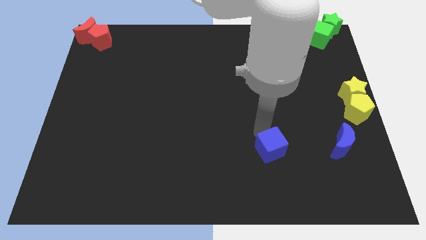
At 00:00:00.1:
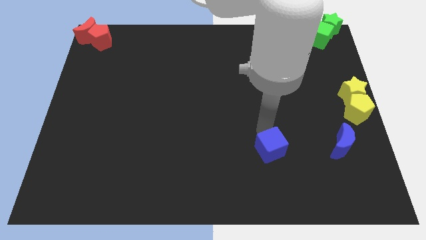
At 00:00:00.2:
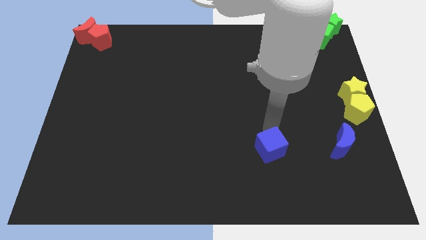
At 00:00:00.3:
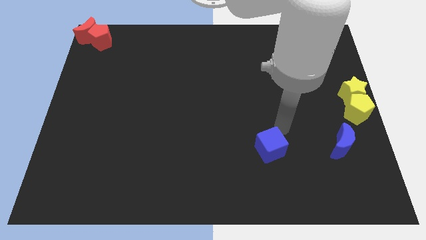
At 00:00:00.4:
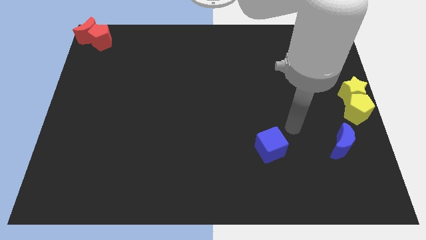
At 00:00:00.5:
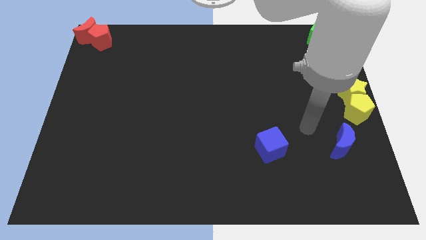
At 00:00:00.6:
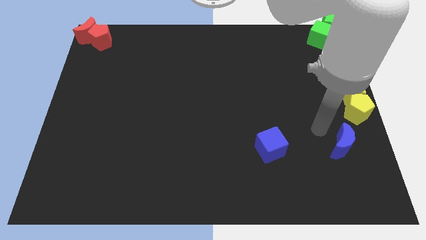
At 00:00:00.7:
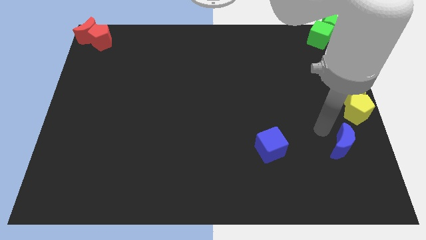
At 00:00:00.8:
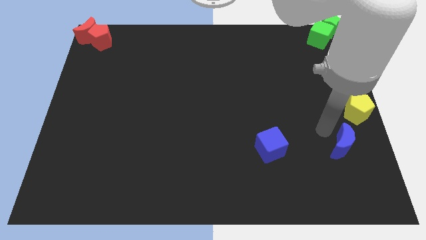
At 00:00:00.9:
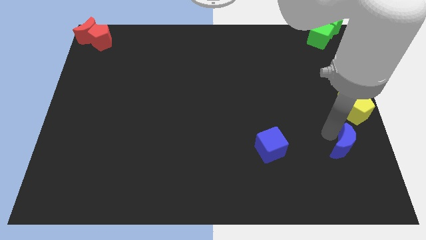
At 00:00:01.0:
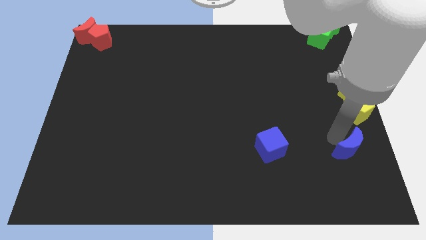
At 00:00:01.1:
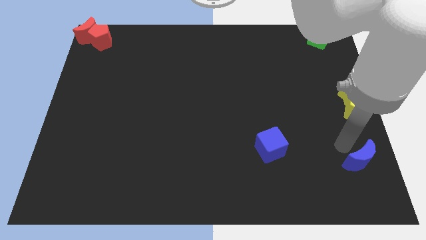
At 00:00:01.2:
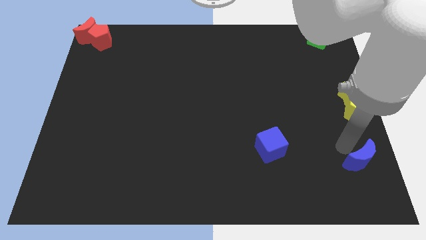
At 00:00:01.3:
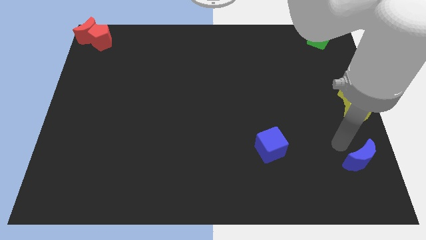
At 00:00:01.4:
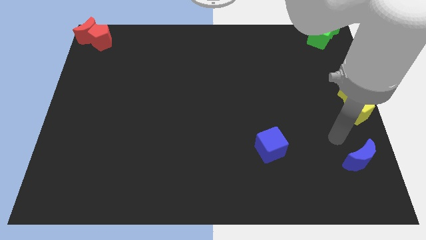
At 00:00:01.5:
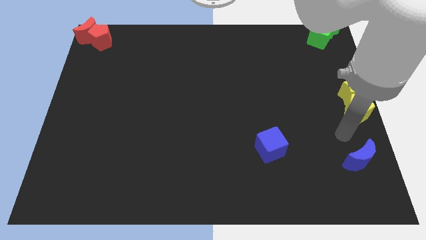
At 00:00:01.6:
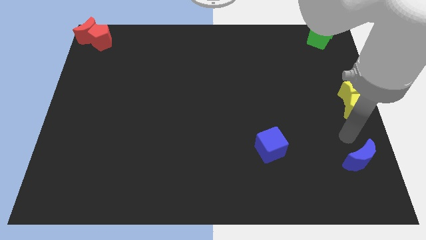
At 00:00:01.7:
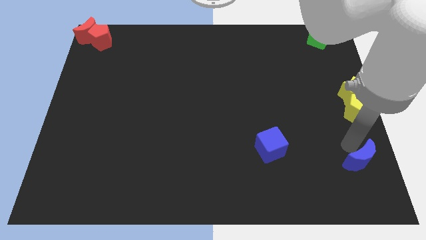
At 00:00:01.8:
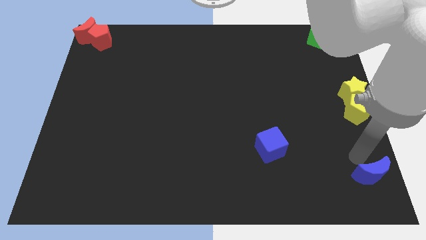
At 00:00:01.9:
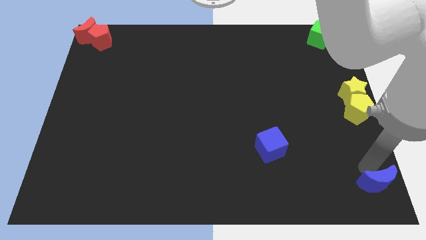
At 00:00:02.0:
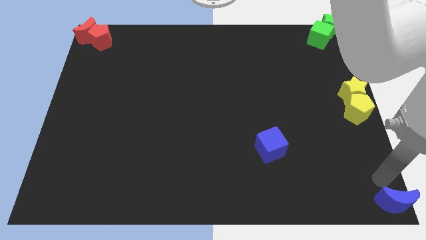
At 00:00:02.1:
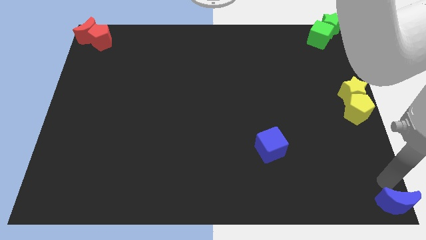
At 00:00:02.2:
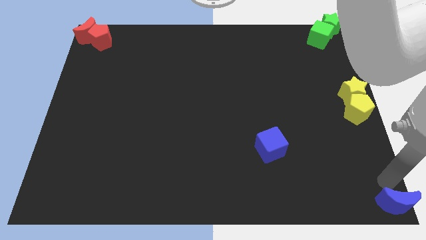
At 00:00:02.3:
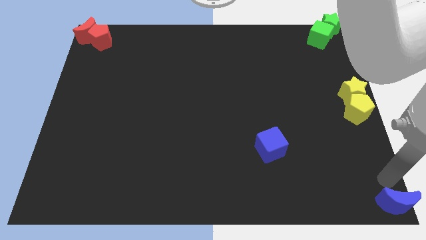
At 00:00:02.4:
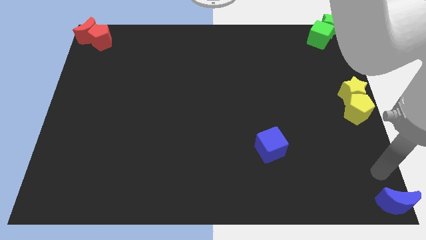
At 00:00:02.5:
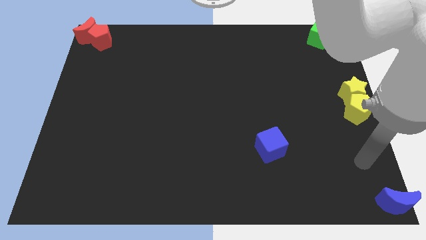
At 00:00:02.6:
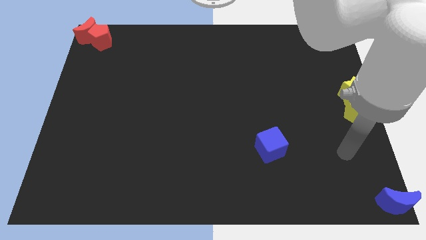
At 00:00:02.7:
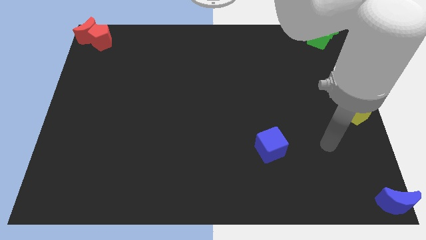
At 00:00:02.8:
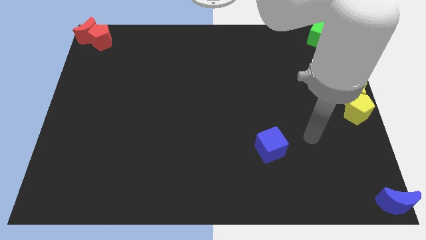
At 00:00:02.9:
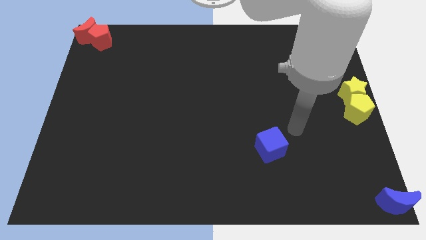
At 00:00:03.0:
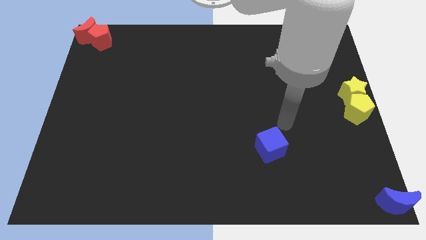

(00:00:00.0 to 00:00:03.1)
move the blue crescent to the bottom right

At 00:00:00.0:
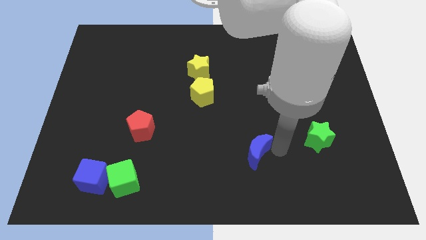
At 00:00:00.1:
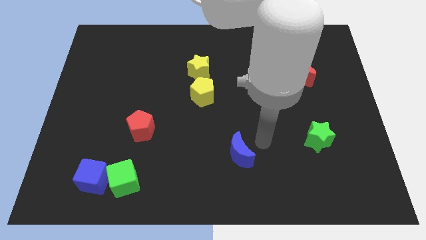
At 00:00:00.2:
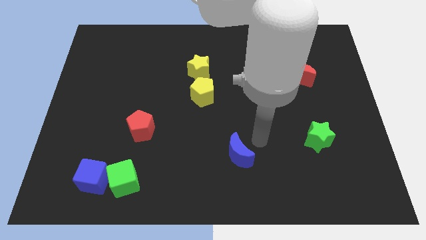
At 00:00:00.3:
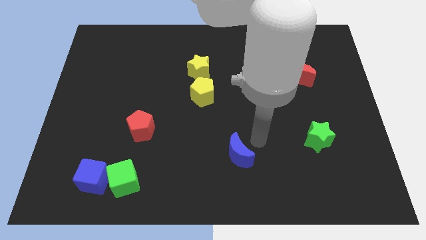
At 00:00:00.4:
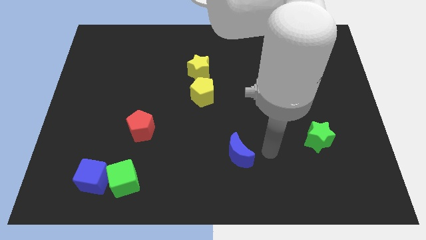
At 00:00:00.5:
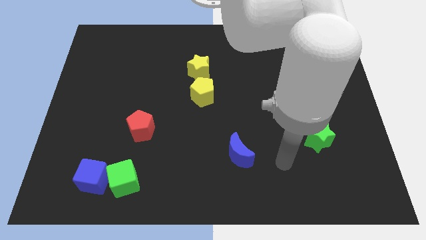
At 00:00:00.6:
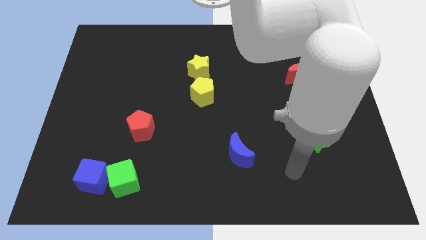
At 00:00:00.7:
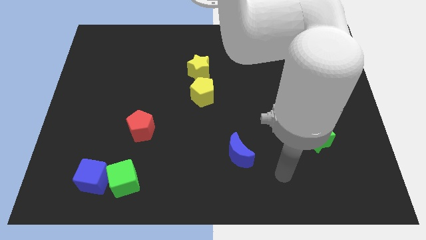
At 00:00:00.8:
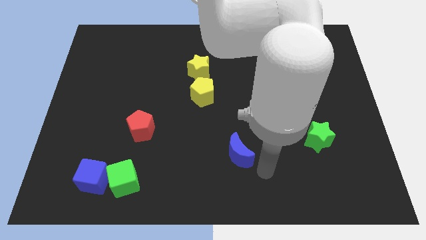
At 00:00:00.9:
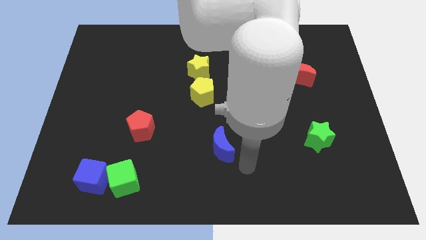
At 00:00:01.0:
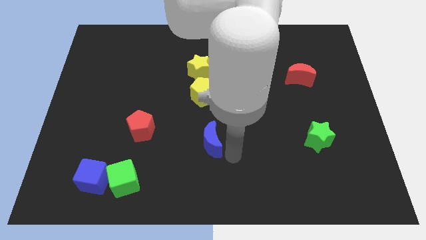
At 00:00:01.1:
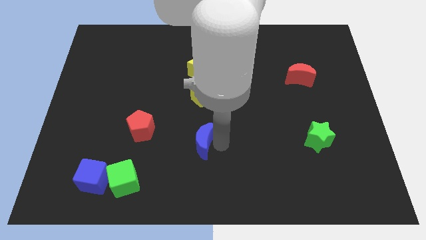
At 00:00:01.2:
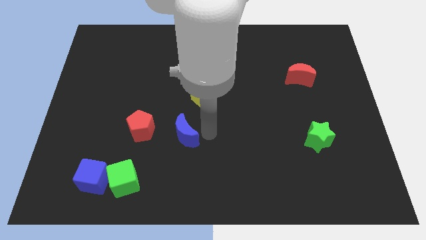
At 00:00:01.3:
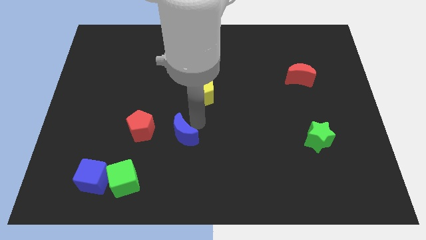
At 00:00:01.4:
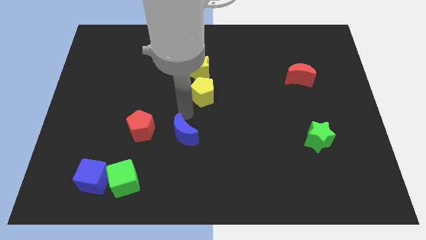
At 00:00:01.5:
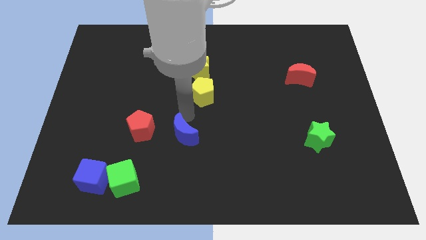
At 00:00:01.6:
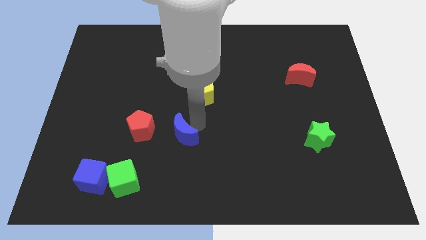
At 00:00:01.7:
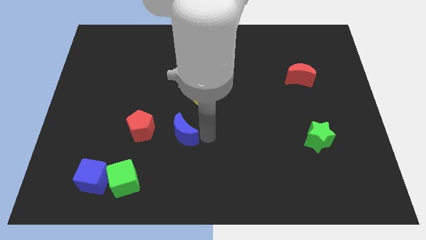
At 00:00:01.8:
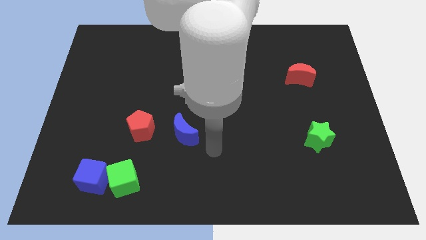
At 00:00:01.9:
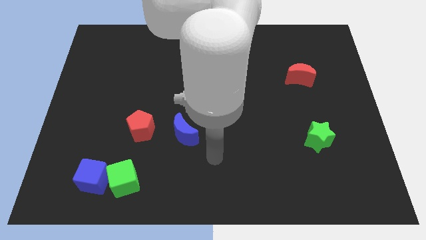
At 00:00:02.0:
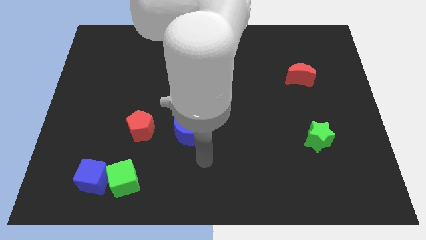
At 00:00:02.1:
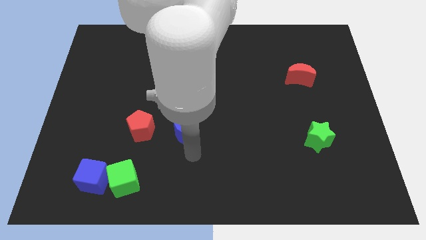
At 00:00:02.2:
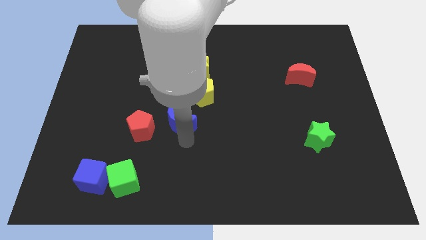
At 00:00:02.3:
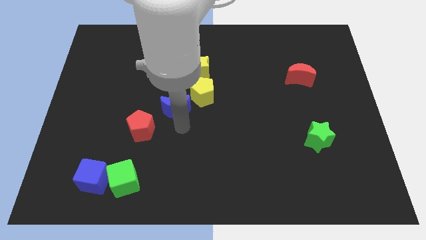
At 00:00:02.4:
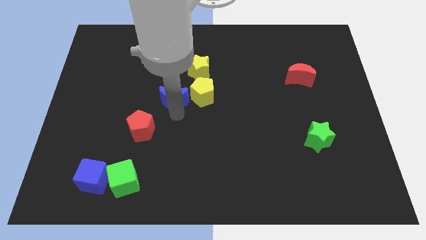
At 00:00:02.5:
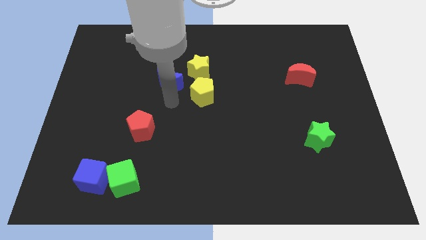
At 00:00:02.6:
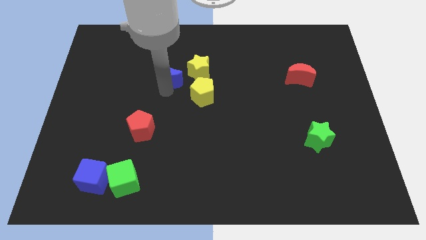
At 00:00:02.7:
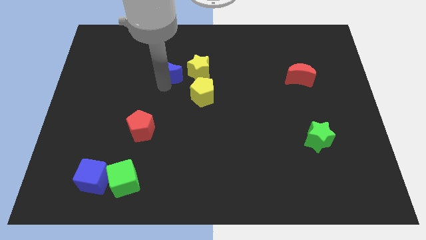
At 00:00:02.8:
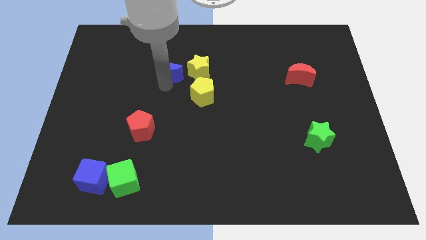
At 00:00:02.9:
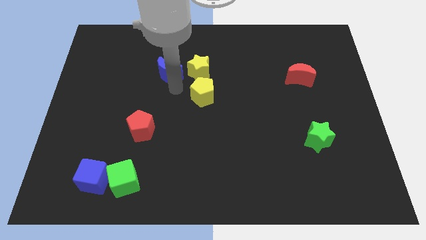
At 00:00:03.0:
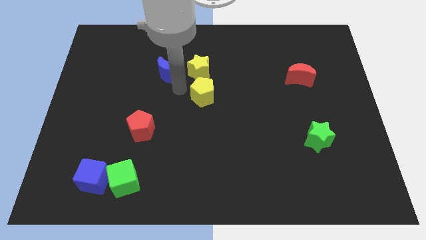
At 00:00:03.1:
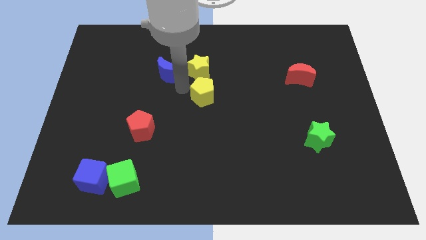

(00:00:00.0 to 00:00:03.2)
place the blue moon to the left of the yellow star

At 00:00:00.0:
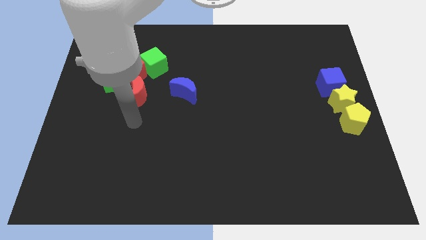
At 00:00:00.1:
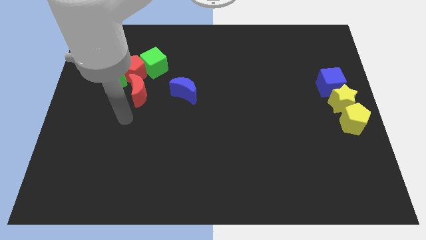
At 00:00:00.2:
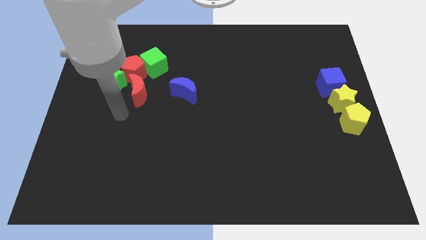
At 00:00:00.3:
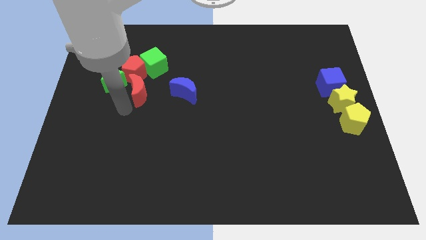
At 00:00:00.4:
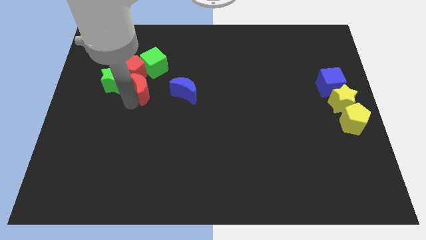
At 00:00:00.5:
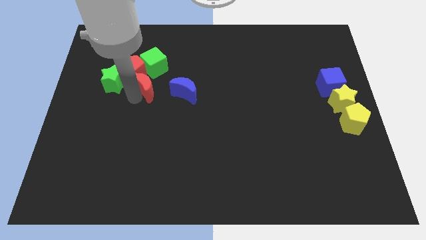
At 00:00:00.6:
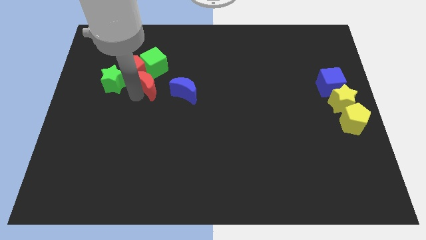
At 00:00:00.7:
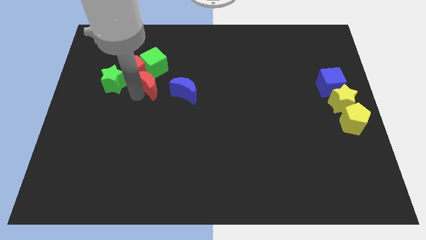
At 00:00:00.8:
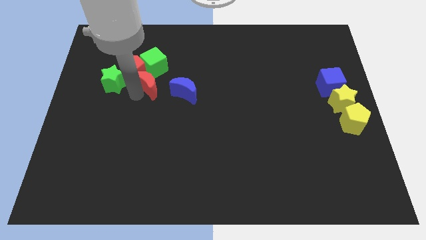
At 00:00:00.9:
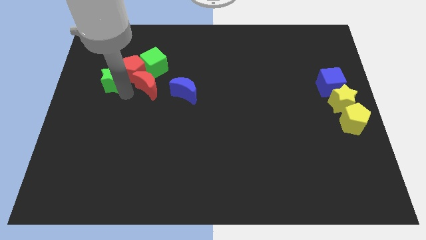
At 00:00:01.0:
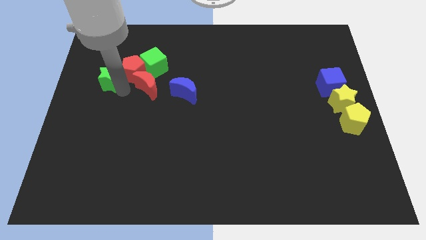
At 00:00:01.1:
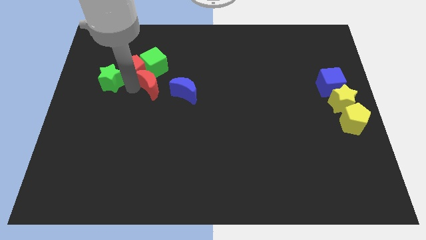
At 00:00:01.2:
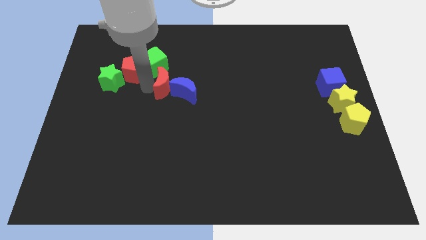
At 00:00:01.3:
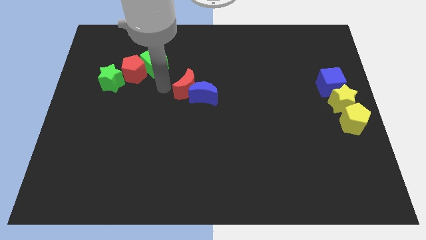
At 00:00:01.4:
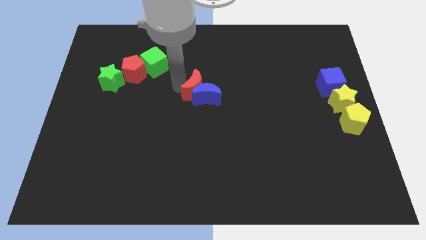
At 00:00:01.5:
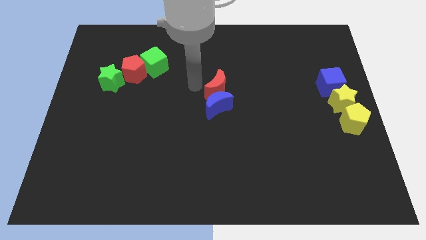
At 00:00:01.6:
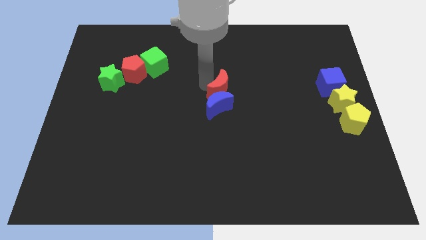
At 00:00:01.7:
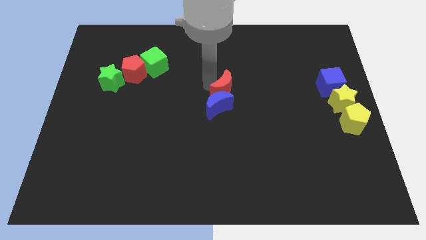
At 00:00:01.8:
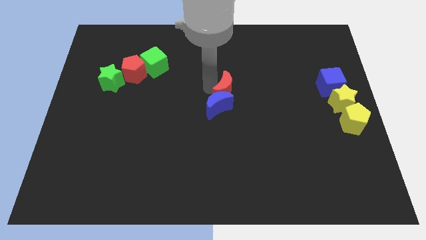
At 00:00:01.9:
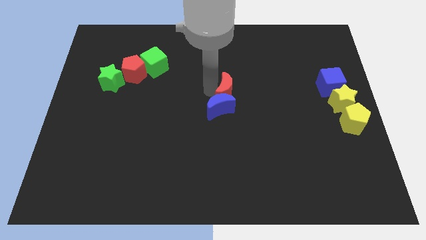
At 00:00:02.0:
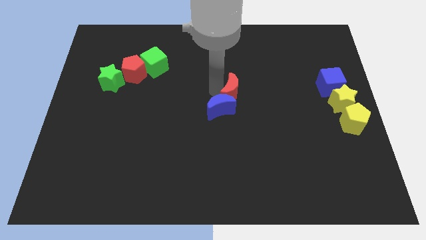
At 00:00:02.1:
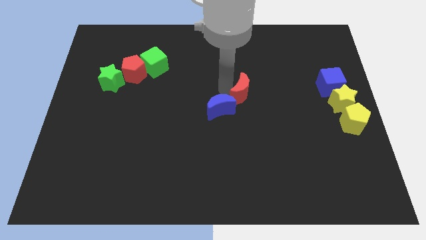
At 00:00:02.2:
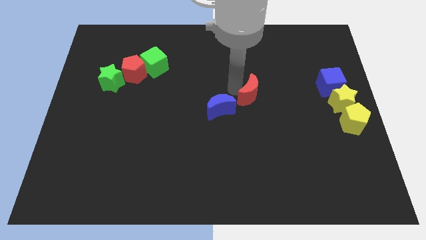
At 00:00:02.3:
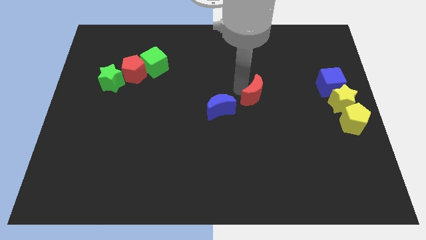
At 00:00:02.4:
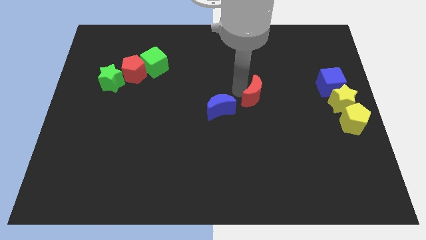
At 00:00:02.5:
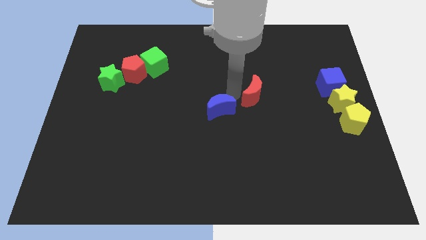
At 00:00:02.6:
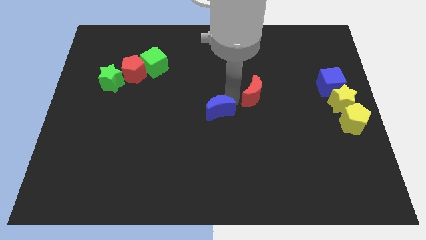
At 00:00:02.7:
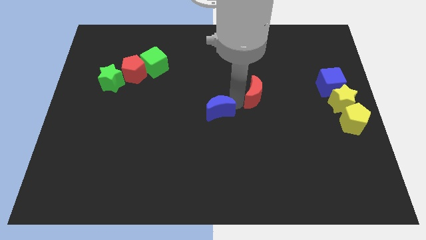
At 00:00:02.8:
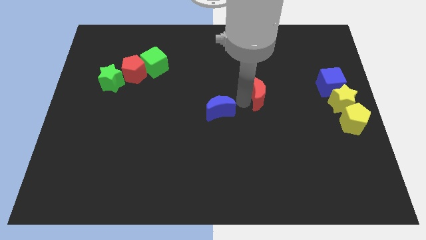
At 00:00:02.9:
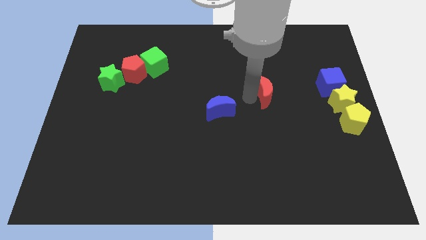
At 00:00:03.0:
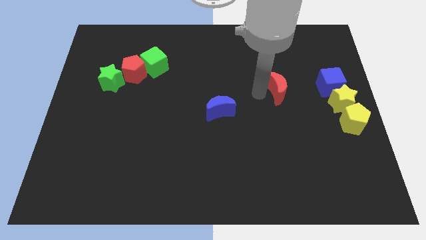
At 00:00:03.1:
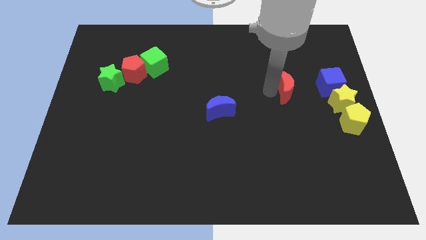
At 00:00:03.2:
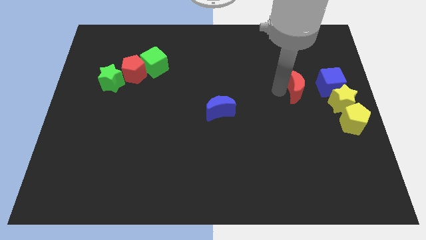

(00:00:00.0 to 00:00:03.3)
slide the red crescent slightly to the right
